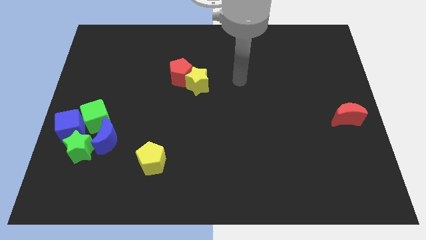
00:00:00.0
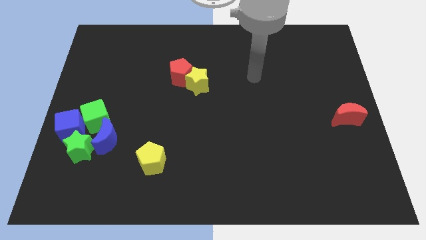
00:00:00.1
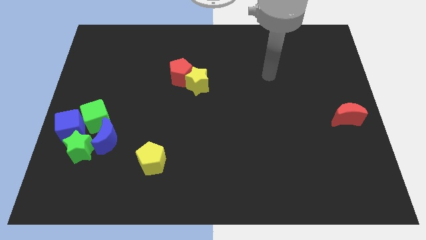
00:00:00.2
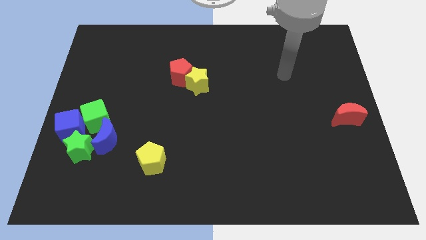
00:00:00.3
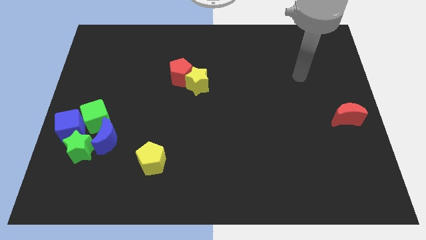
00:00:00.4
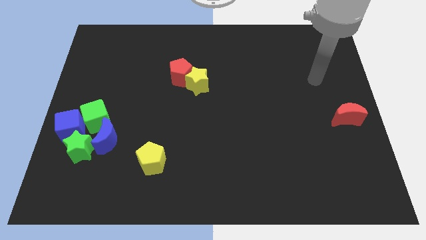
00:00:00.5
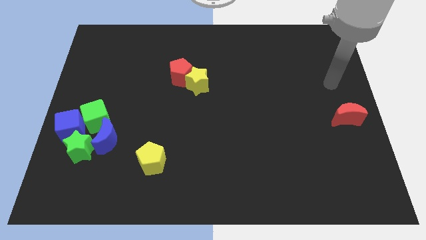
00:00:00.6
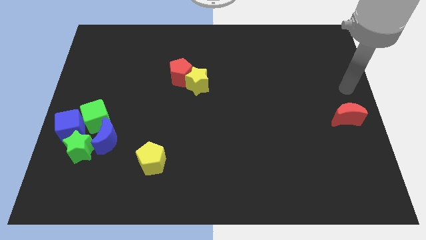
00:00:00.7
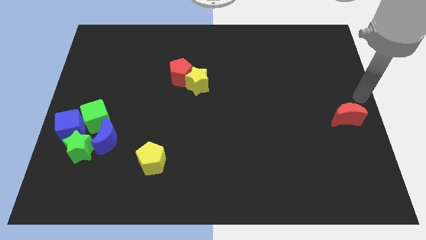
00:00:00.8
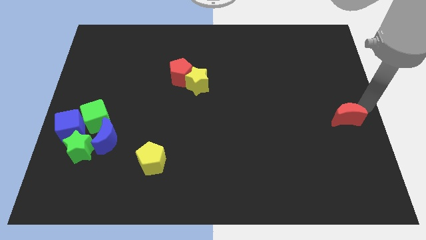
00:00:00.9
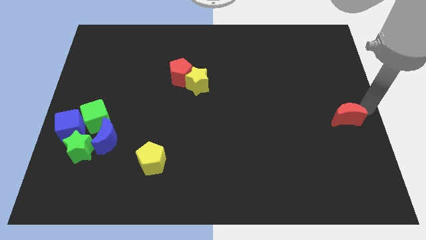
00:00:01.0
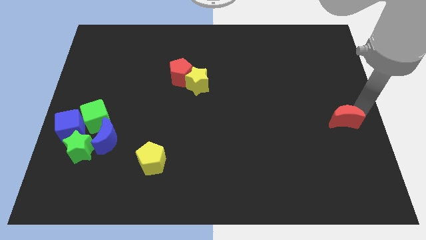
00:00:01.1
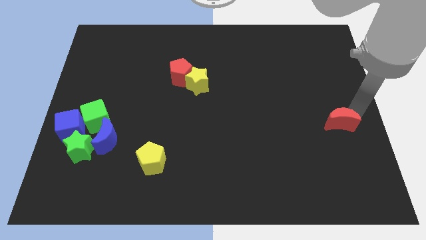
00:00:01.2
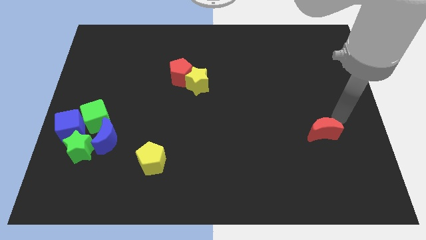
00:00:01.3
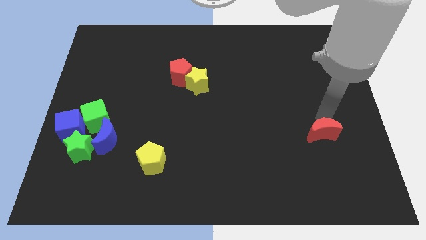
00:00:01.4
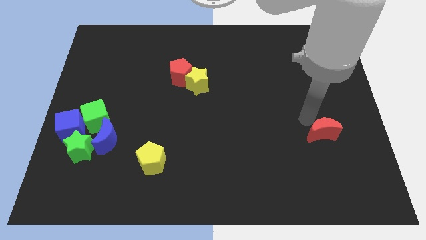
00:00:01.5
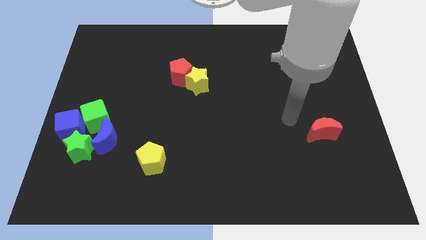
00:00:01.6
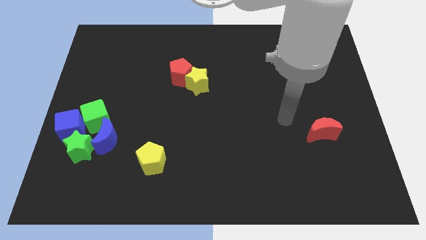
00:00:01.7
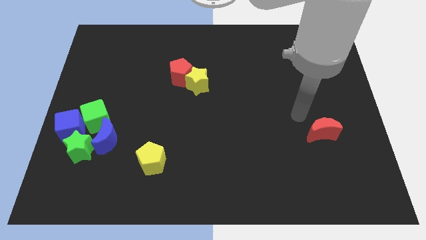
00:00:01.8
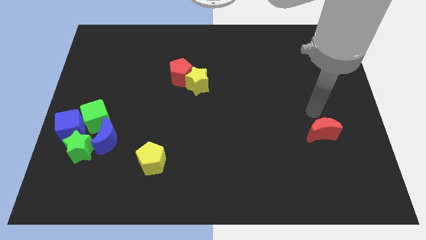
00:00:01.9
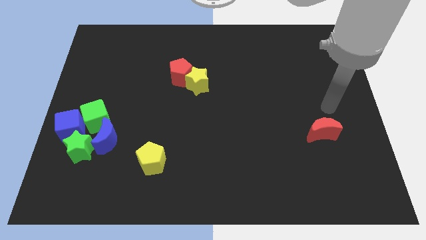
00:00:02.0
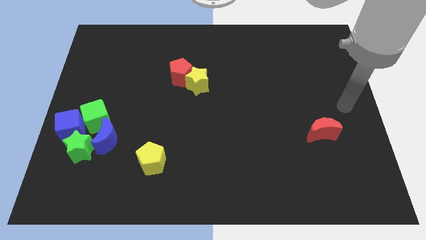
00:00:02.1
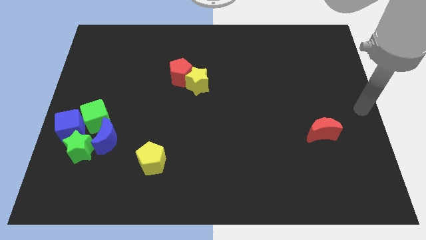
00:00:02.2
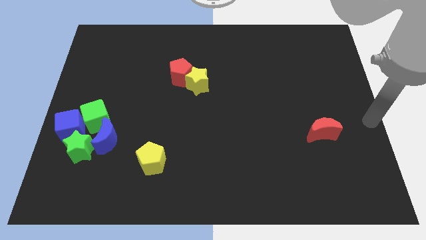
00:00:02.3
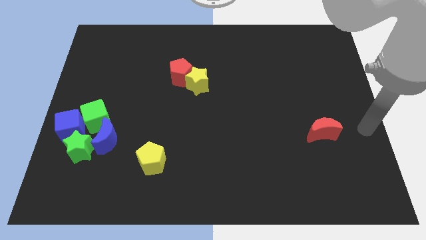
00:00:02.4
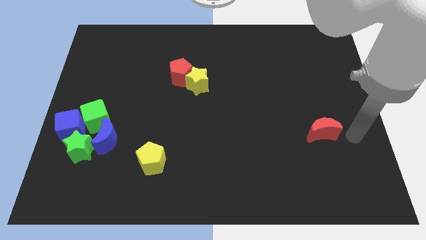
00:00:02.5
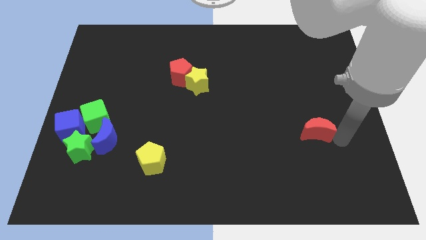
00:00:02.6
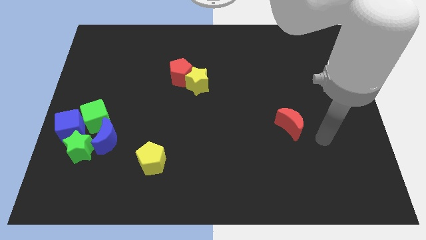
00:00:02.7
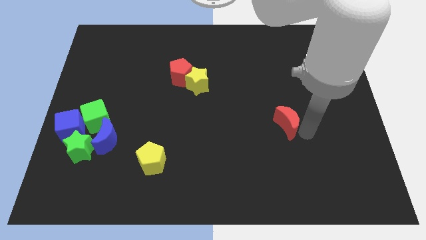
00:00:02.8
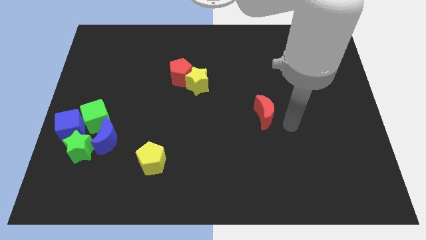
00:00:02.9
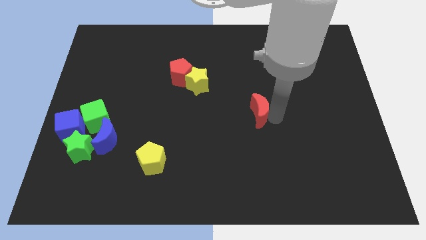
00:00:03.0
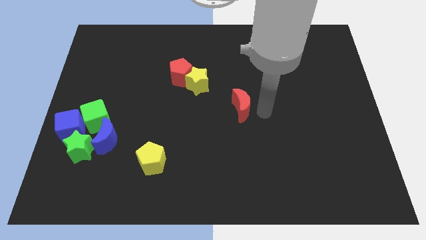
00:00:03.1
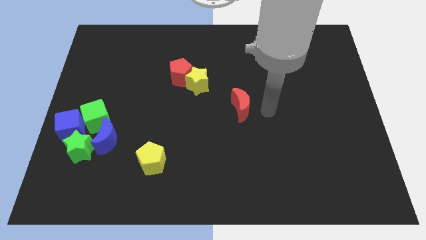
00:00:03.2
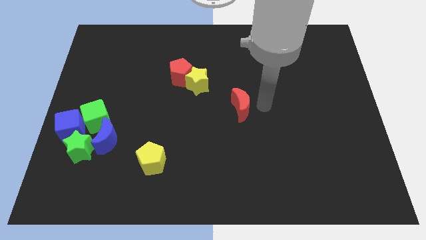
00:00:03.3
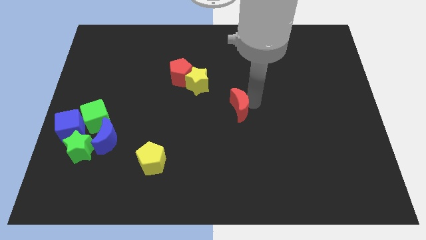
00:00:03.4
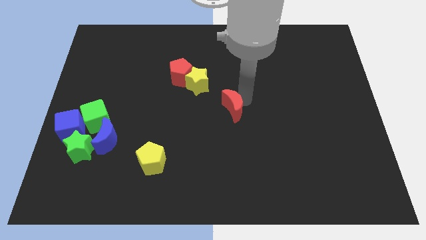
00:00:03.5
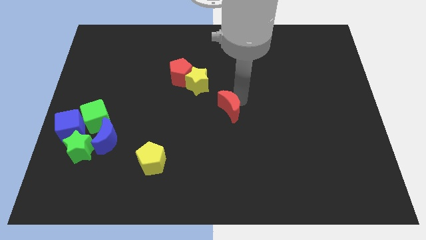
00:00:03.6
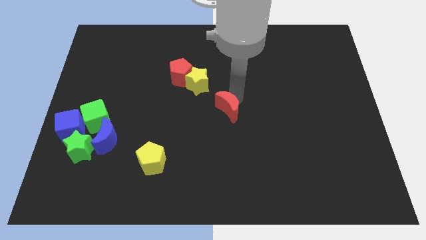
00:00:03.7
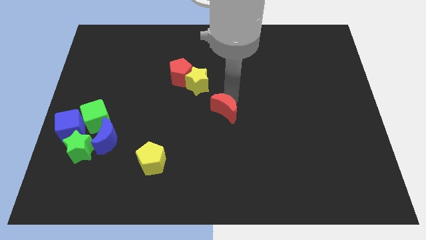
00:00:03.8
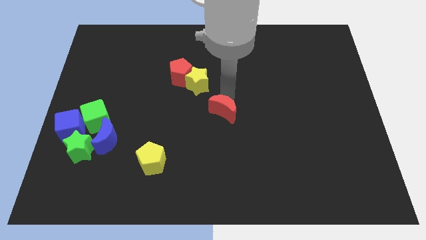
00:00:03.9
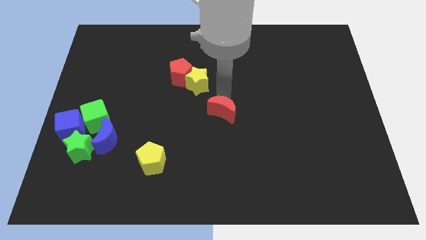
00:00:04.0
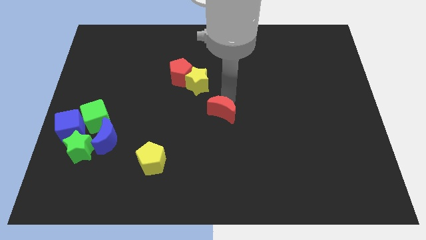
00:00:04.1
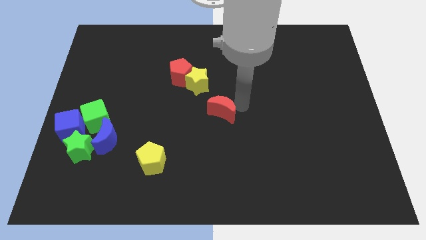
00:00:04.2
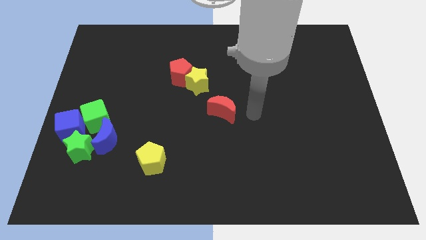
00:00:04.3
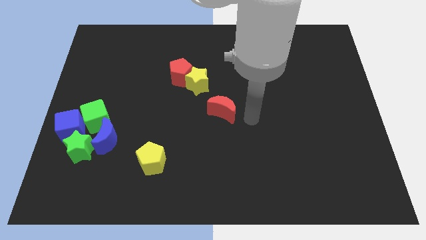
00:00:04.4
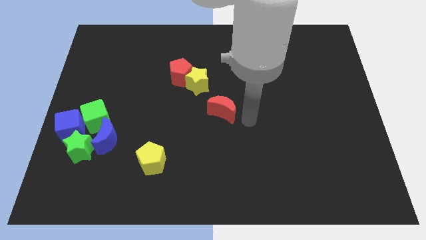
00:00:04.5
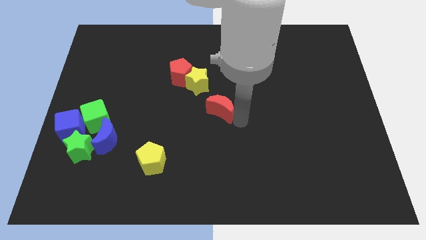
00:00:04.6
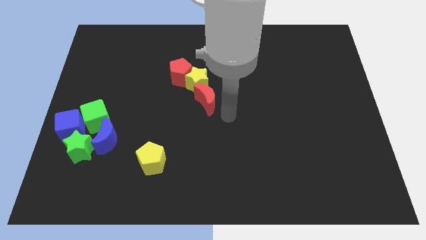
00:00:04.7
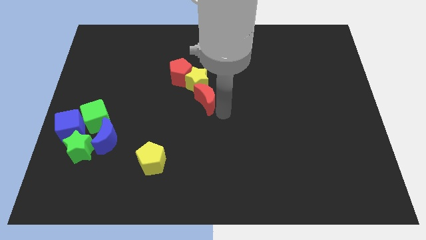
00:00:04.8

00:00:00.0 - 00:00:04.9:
place the red moon to the bottom of the yellow star

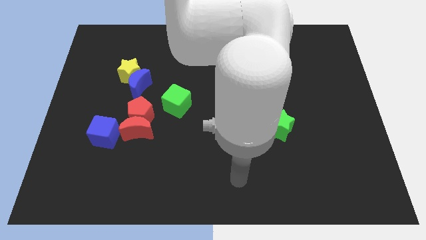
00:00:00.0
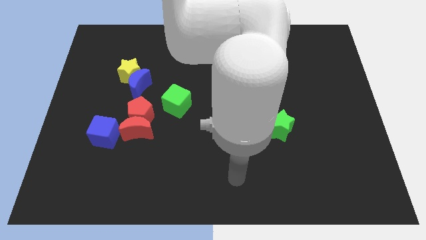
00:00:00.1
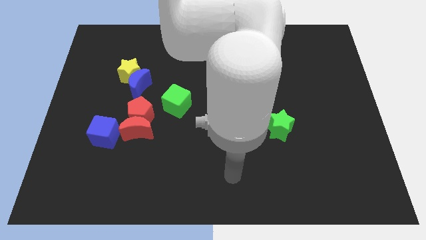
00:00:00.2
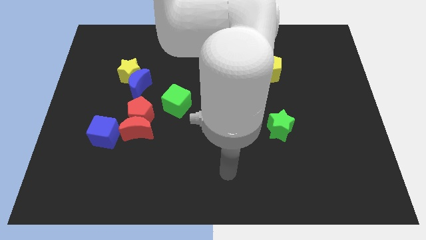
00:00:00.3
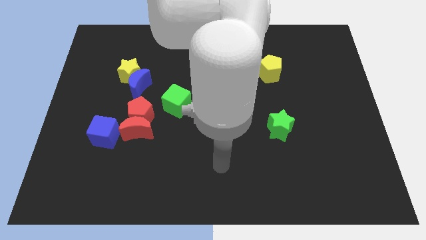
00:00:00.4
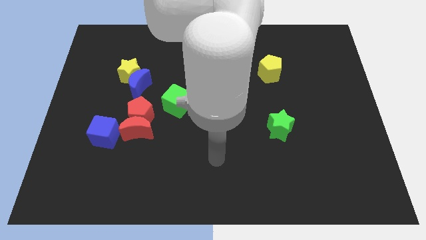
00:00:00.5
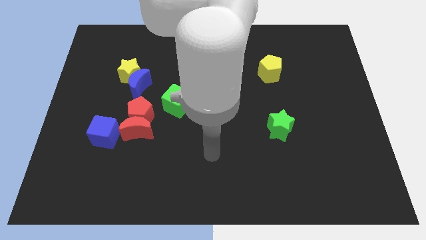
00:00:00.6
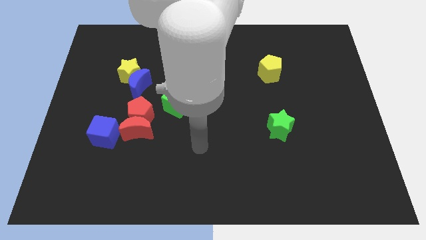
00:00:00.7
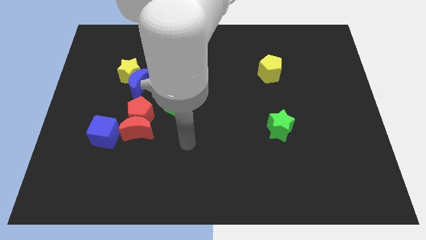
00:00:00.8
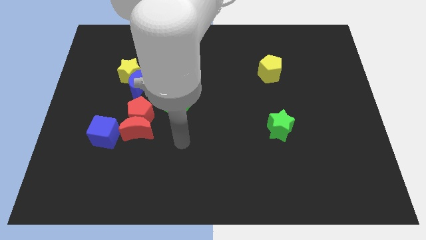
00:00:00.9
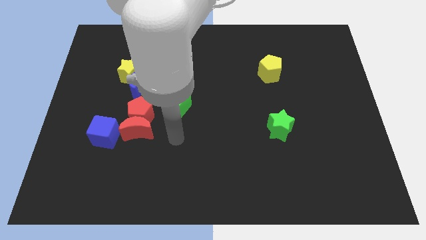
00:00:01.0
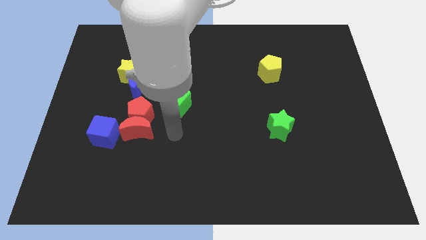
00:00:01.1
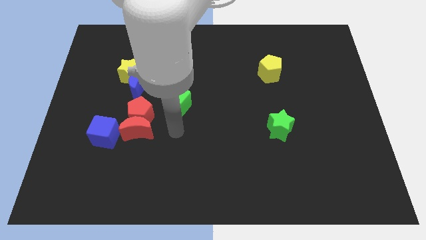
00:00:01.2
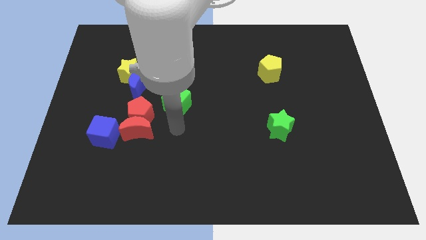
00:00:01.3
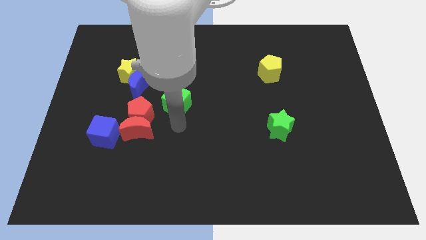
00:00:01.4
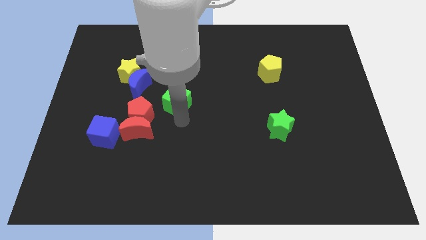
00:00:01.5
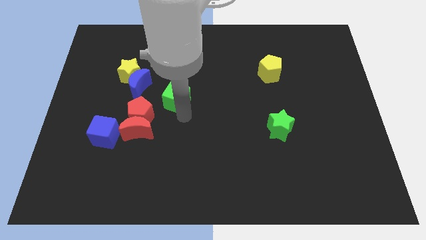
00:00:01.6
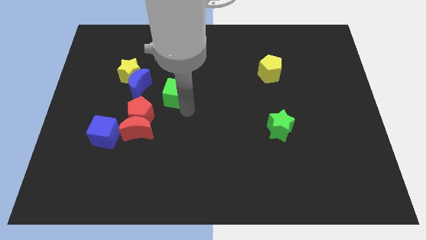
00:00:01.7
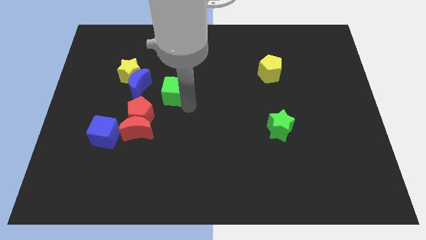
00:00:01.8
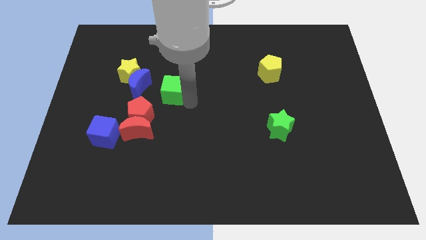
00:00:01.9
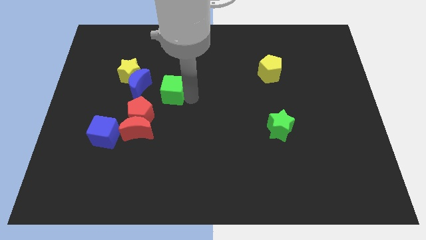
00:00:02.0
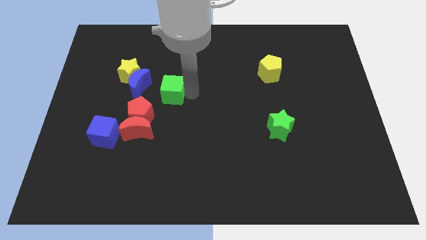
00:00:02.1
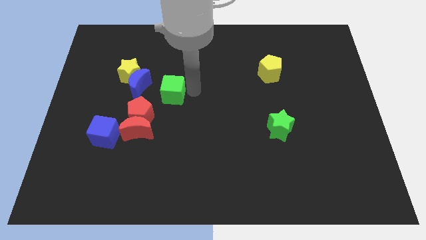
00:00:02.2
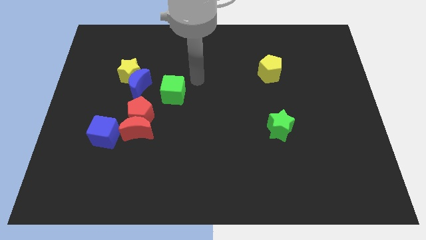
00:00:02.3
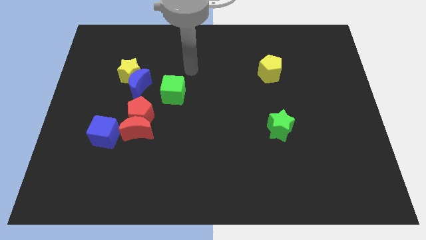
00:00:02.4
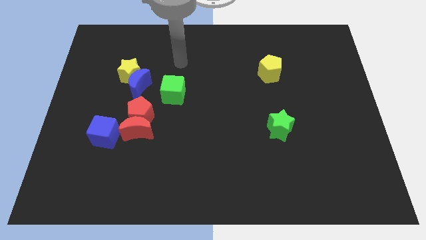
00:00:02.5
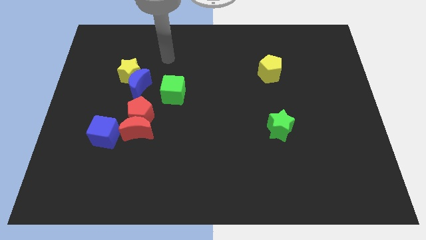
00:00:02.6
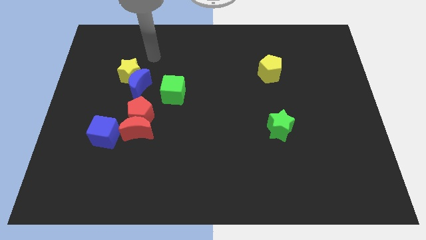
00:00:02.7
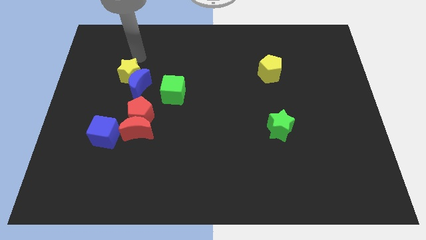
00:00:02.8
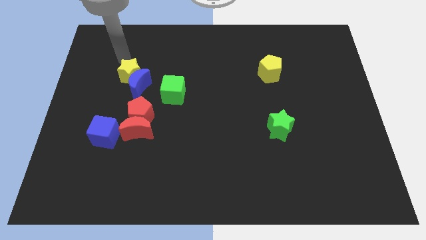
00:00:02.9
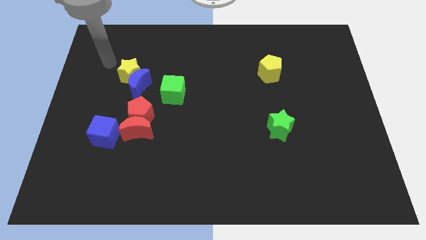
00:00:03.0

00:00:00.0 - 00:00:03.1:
move the green cube slightly to the top

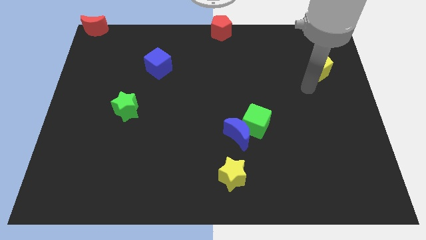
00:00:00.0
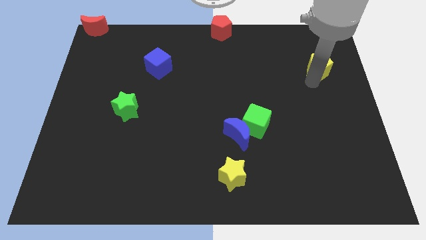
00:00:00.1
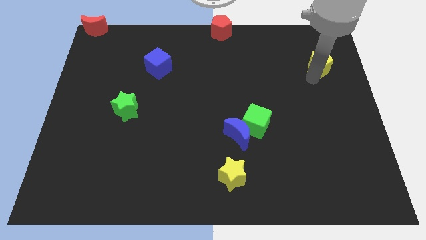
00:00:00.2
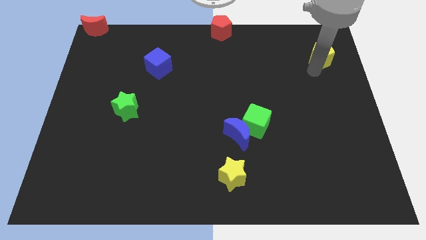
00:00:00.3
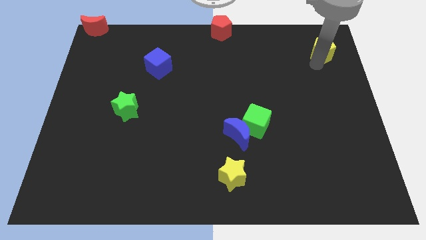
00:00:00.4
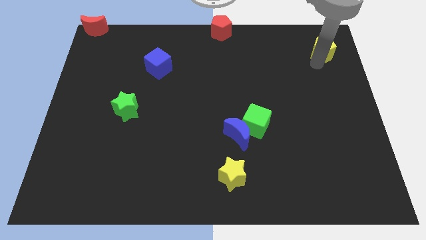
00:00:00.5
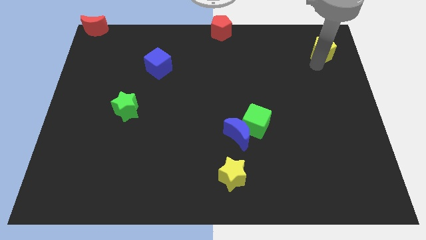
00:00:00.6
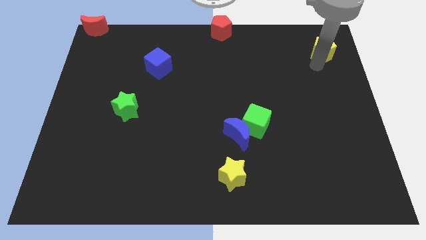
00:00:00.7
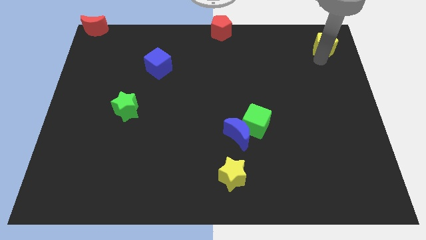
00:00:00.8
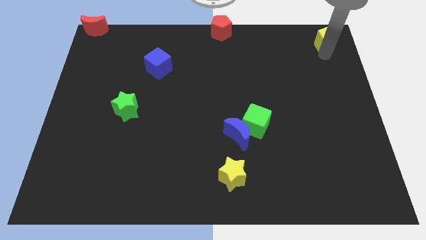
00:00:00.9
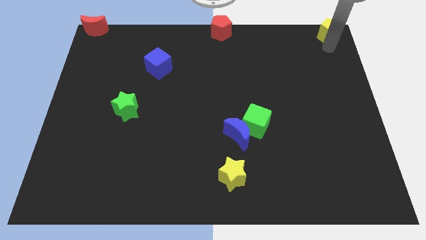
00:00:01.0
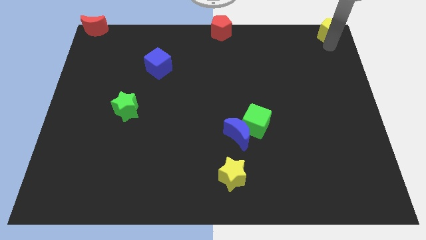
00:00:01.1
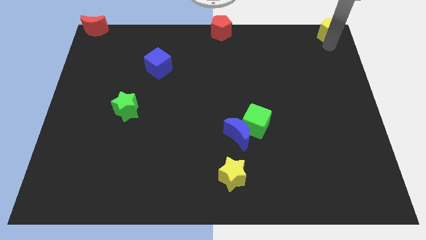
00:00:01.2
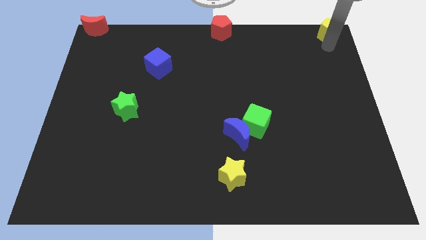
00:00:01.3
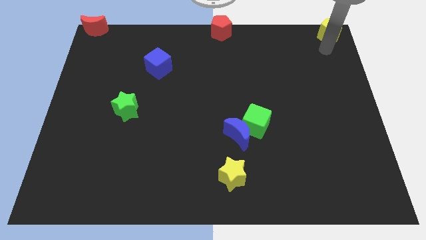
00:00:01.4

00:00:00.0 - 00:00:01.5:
push the yellow pentagon towards the top right corner
